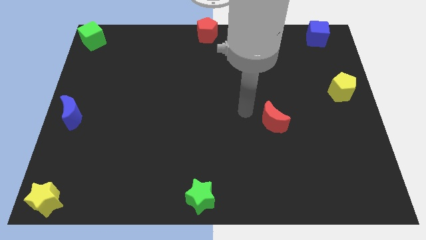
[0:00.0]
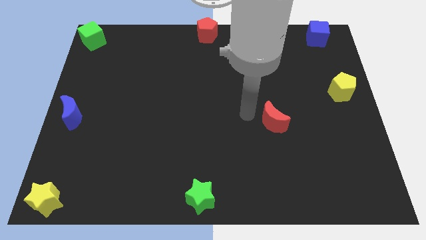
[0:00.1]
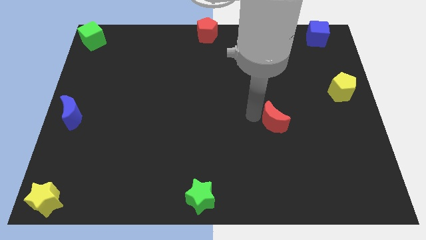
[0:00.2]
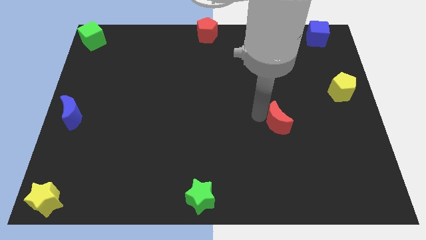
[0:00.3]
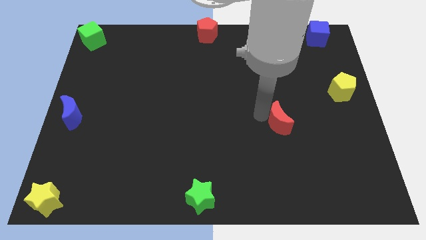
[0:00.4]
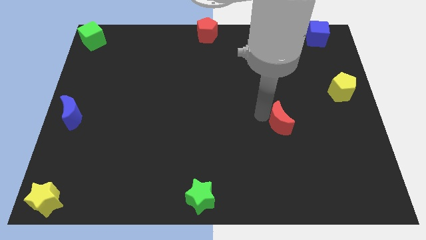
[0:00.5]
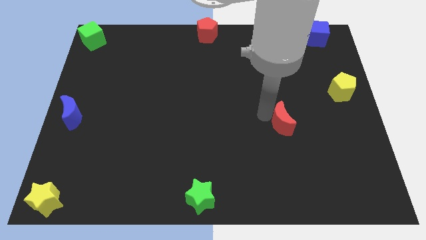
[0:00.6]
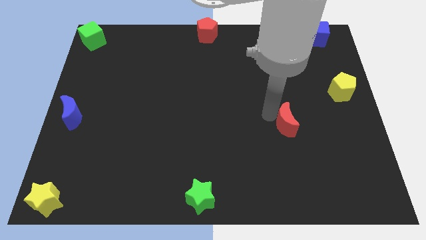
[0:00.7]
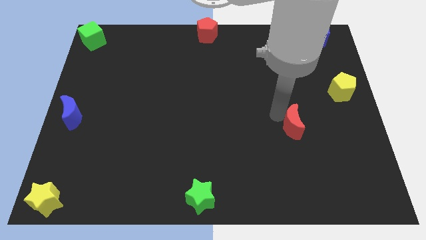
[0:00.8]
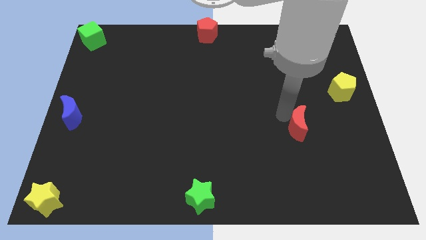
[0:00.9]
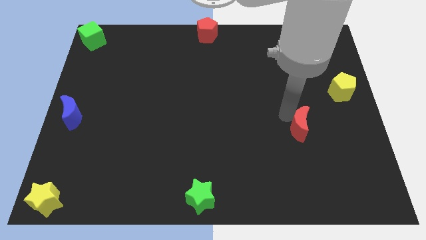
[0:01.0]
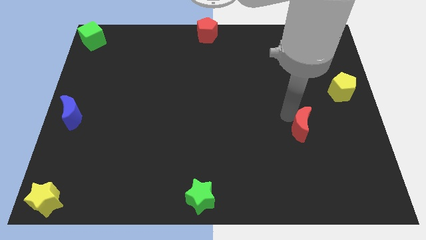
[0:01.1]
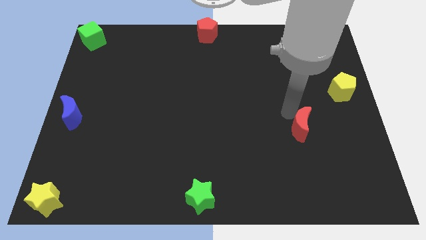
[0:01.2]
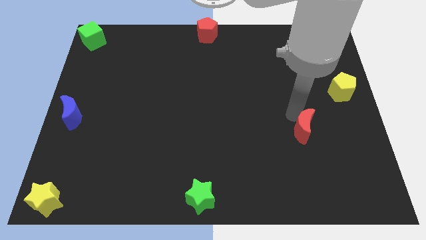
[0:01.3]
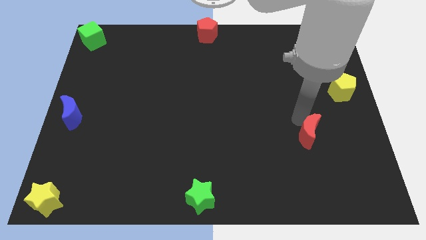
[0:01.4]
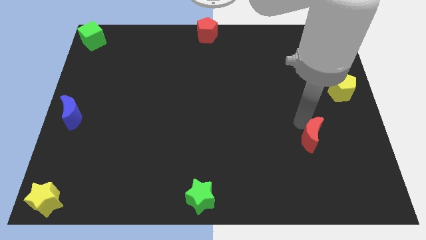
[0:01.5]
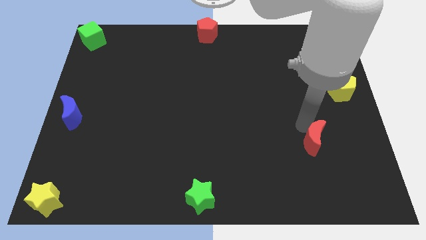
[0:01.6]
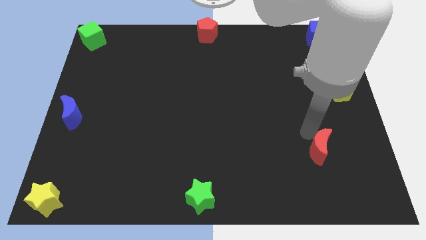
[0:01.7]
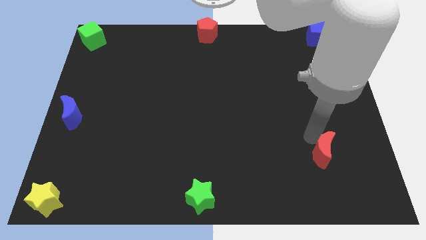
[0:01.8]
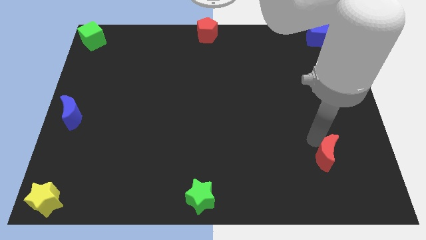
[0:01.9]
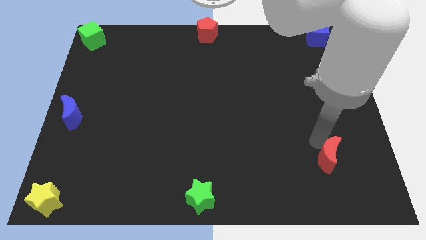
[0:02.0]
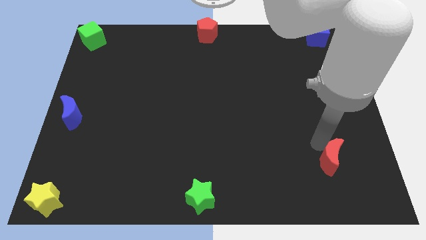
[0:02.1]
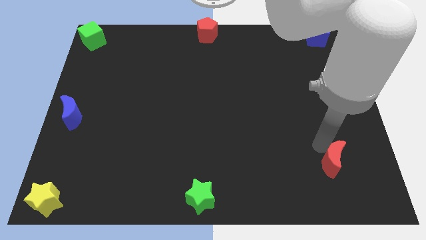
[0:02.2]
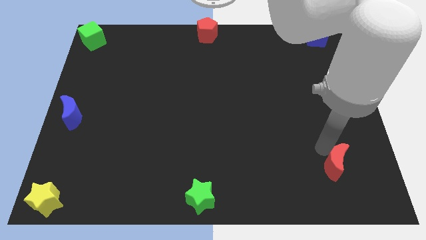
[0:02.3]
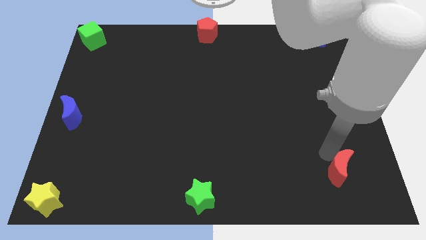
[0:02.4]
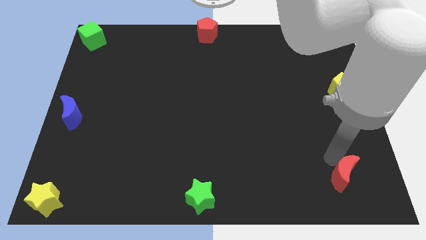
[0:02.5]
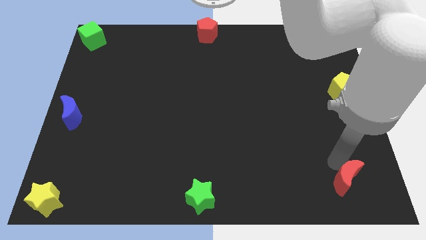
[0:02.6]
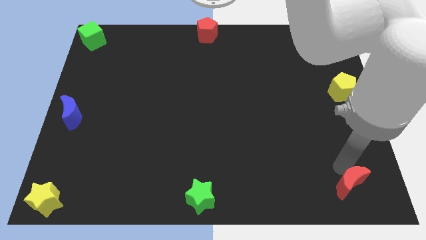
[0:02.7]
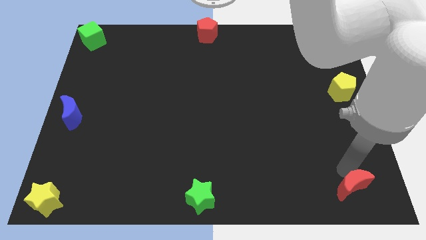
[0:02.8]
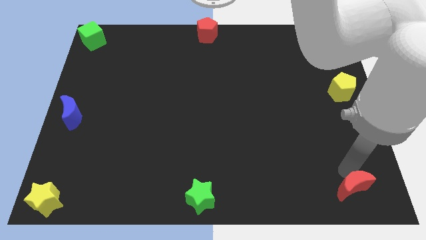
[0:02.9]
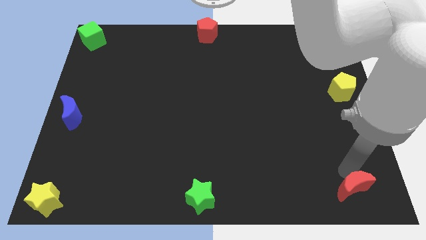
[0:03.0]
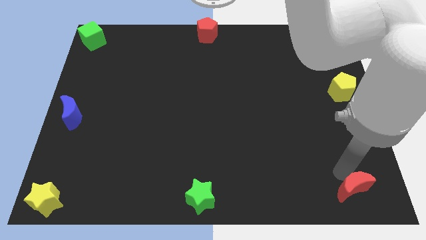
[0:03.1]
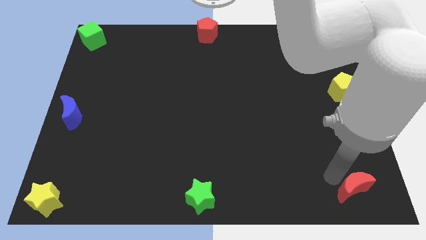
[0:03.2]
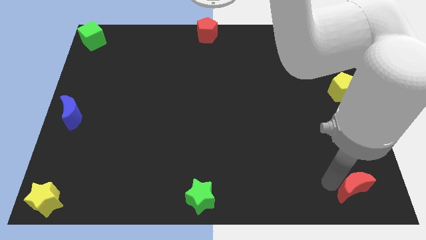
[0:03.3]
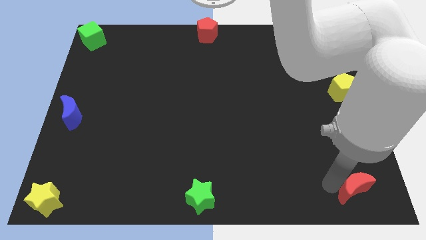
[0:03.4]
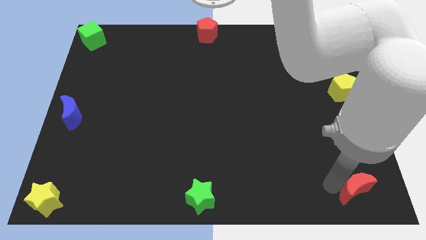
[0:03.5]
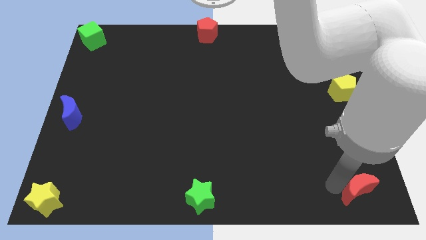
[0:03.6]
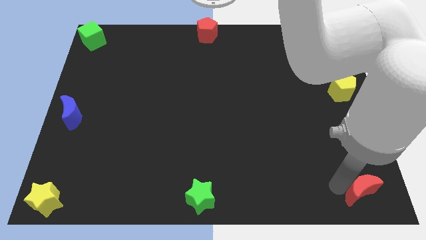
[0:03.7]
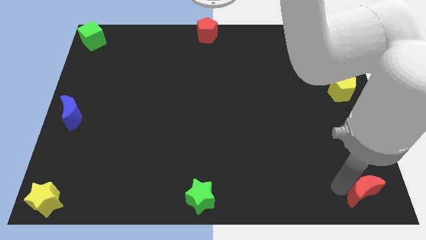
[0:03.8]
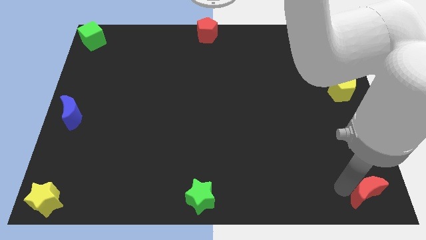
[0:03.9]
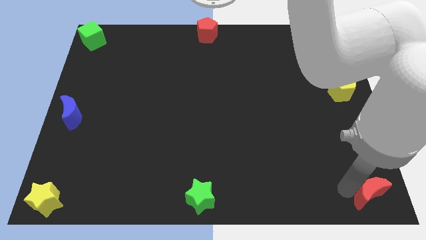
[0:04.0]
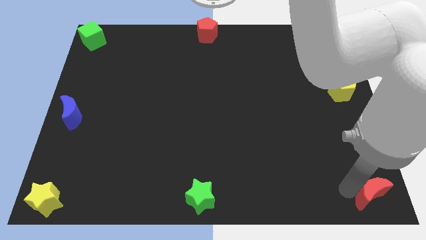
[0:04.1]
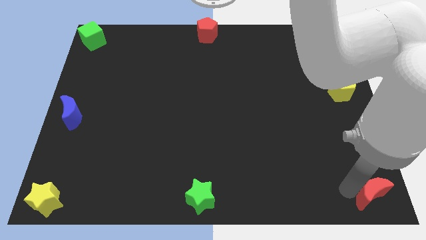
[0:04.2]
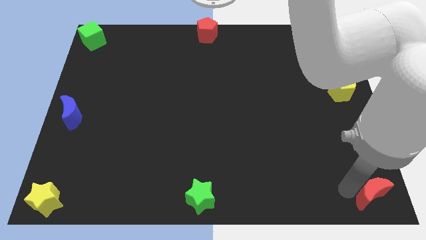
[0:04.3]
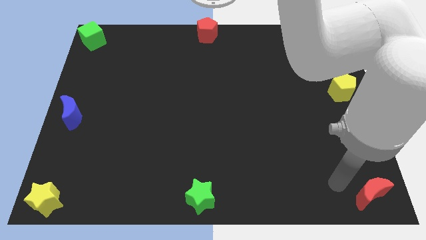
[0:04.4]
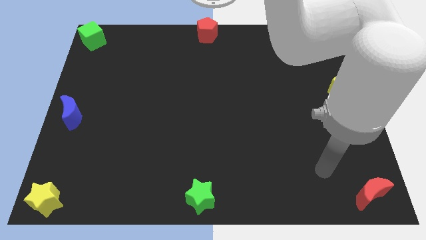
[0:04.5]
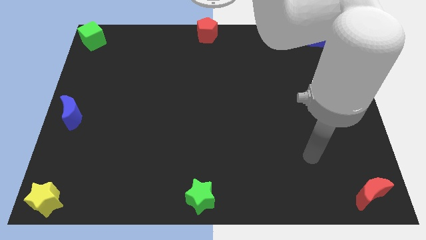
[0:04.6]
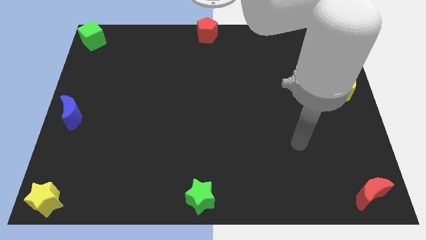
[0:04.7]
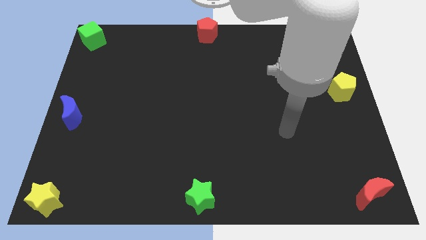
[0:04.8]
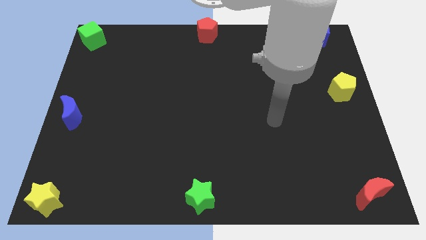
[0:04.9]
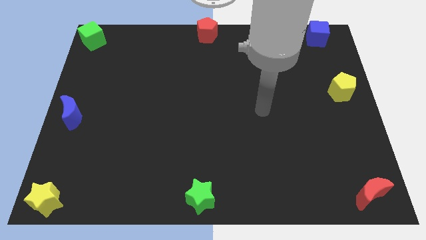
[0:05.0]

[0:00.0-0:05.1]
move the red crescent to the bottom right corner of the board

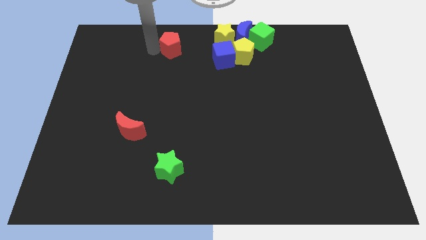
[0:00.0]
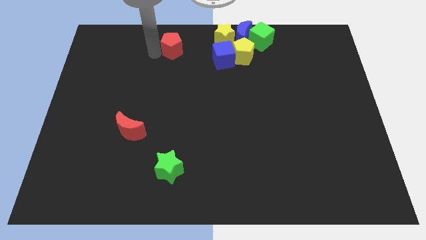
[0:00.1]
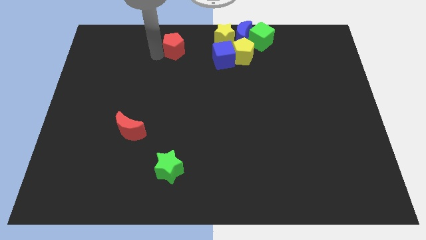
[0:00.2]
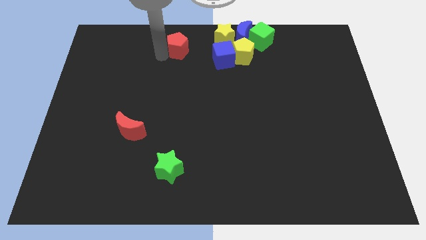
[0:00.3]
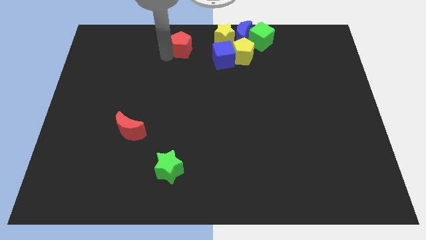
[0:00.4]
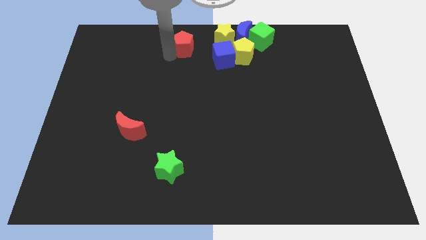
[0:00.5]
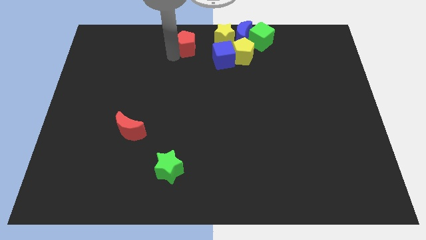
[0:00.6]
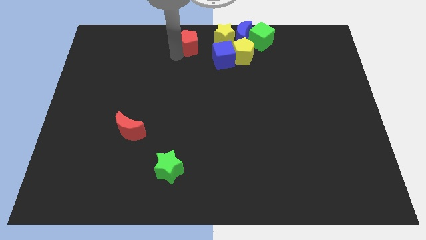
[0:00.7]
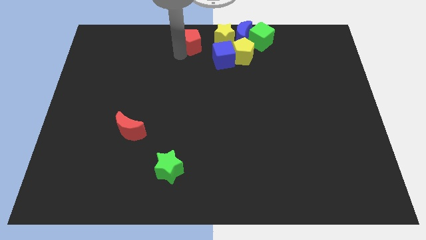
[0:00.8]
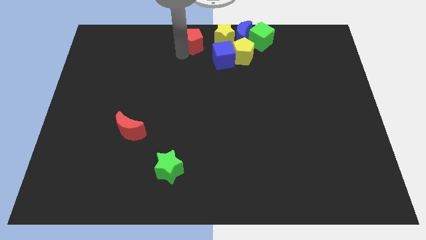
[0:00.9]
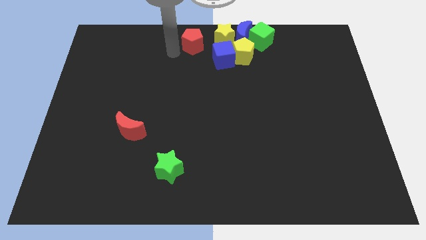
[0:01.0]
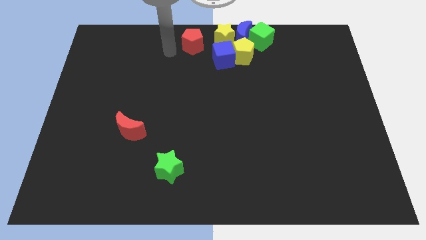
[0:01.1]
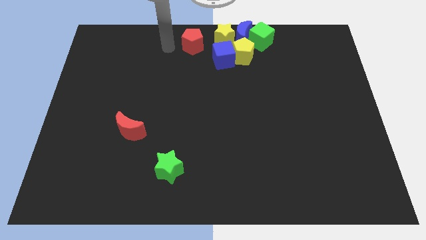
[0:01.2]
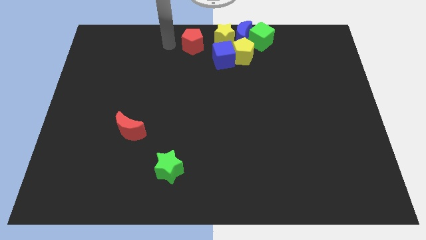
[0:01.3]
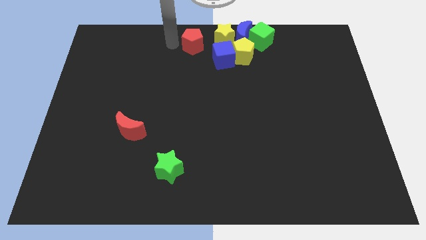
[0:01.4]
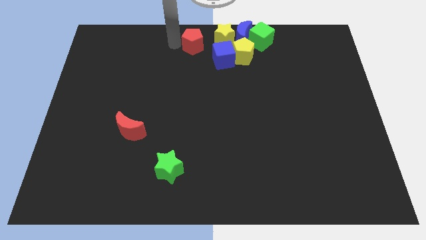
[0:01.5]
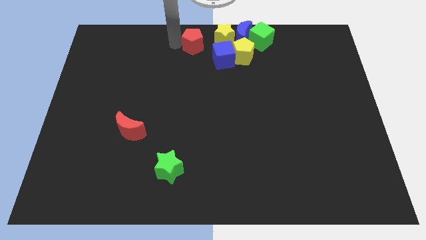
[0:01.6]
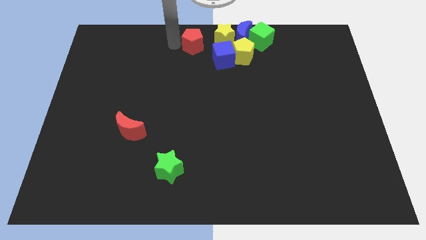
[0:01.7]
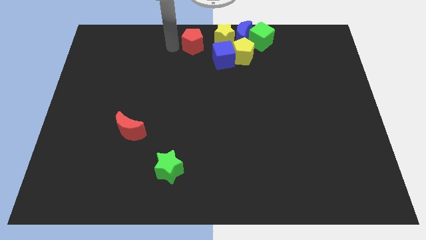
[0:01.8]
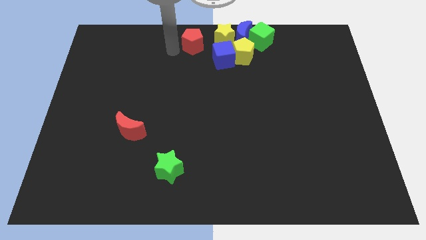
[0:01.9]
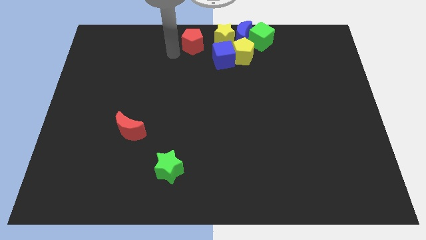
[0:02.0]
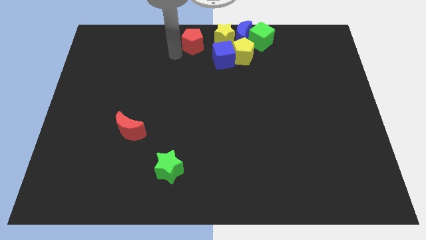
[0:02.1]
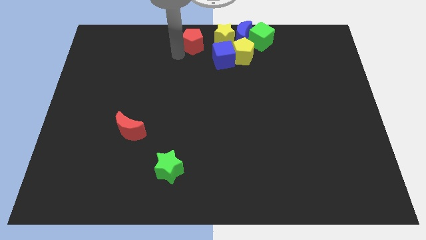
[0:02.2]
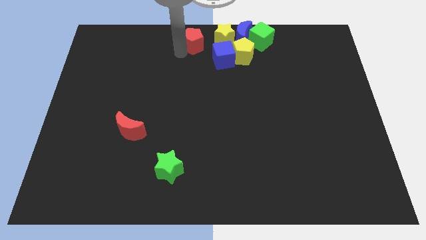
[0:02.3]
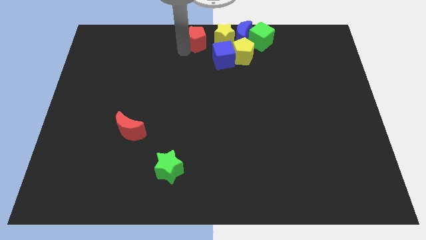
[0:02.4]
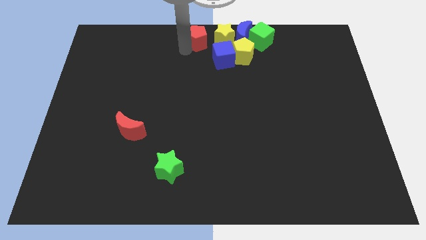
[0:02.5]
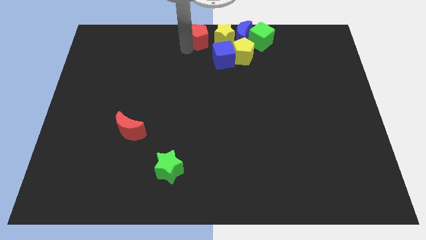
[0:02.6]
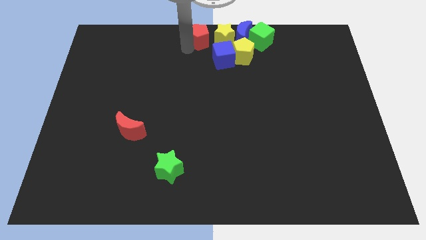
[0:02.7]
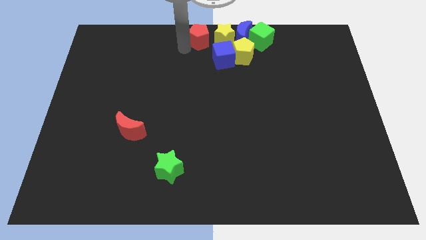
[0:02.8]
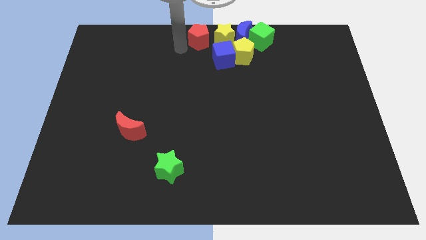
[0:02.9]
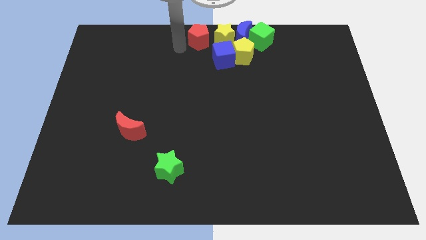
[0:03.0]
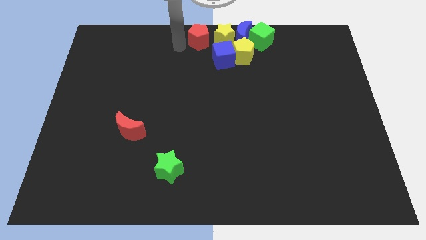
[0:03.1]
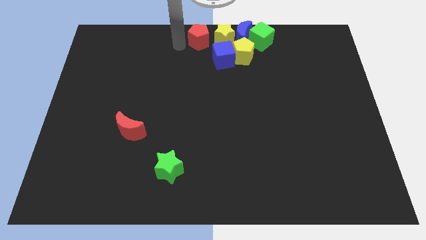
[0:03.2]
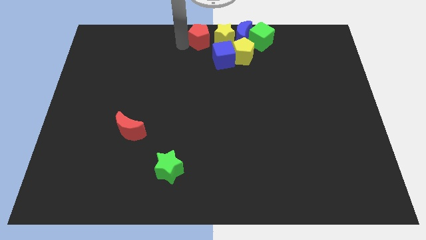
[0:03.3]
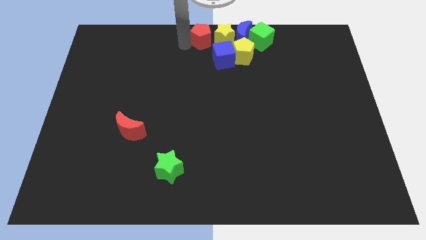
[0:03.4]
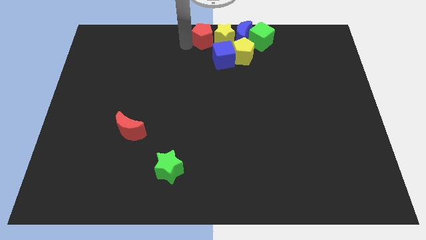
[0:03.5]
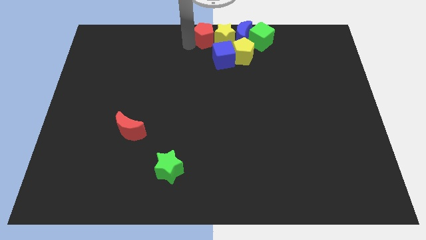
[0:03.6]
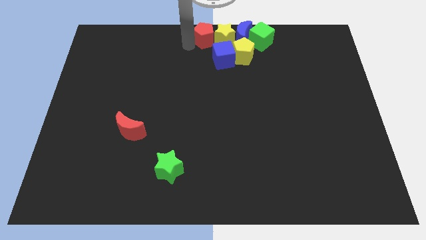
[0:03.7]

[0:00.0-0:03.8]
push the red pentagon left to the yellow star
